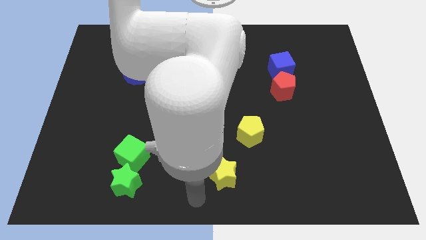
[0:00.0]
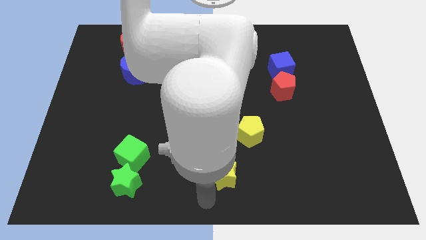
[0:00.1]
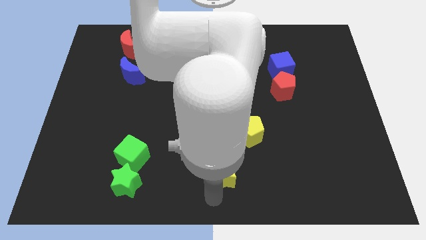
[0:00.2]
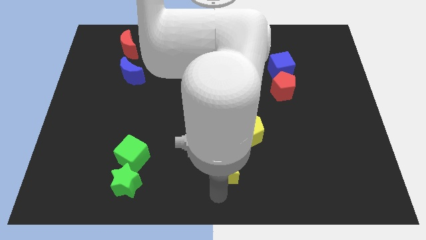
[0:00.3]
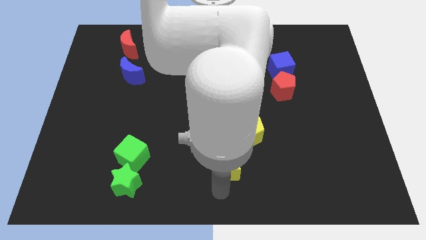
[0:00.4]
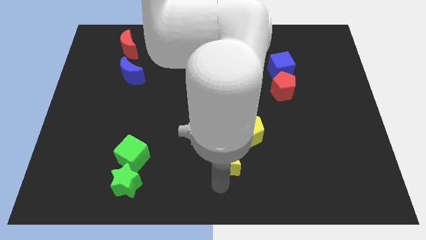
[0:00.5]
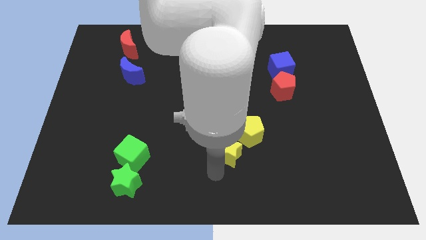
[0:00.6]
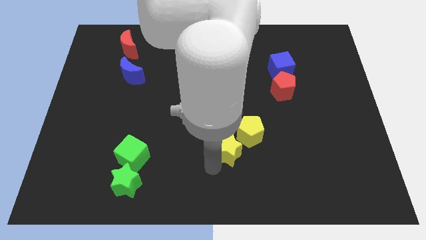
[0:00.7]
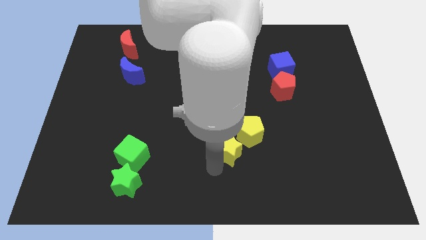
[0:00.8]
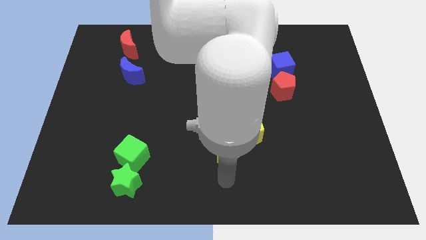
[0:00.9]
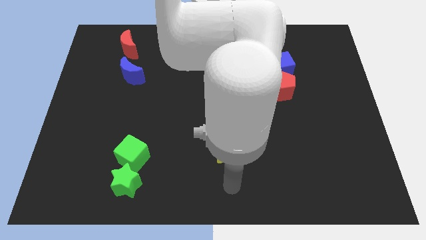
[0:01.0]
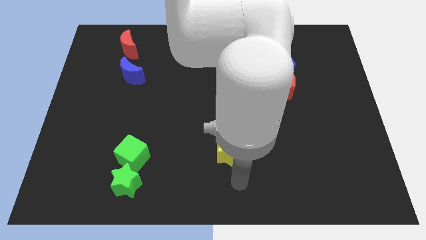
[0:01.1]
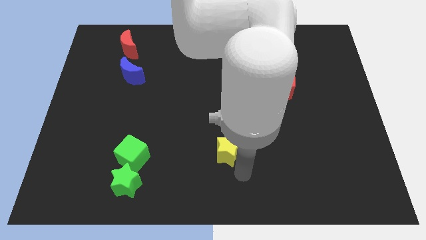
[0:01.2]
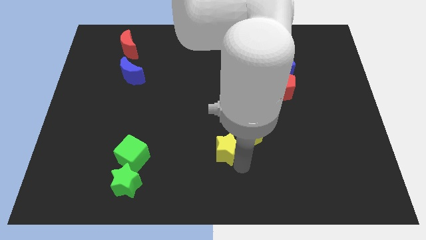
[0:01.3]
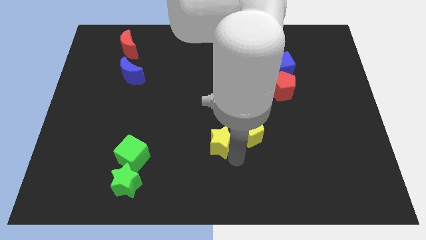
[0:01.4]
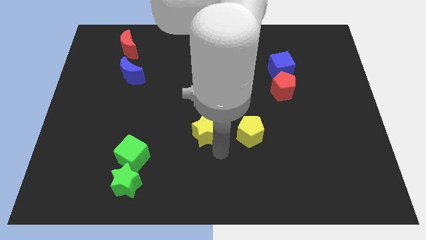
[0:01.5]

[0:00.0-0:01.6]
put the yellow star to the left side of the yellow pentagon

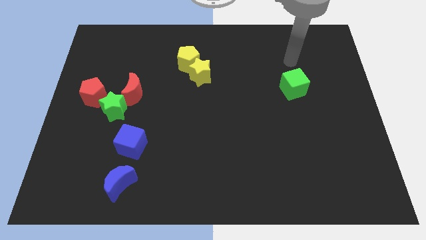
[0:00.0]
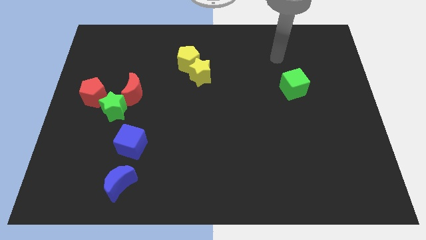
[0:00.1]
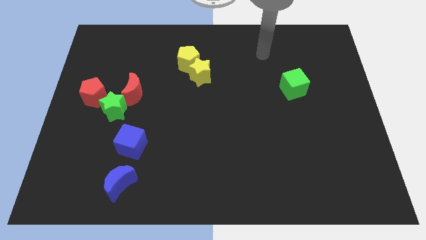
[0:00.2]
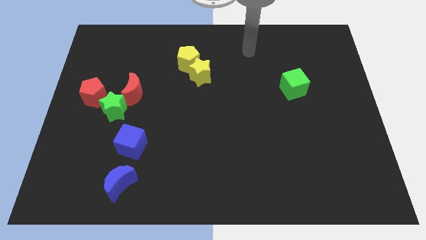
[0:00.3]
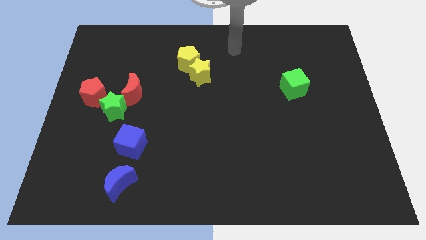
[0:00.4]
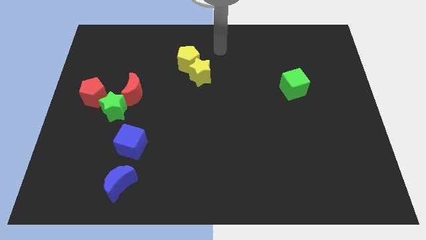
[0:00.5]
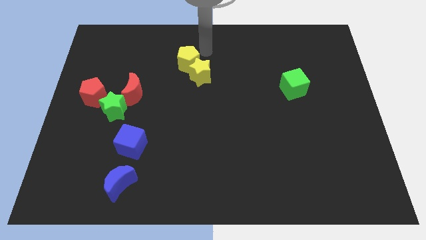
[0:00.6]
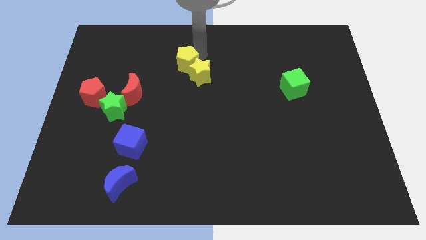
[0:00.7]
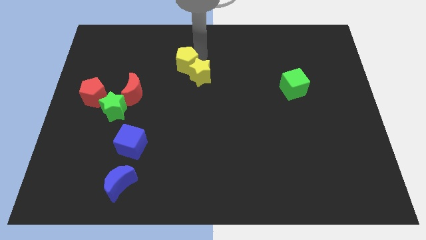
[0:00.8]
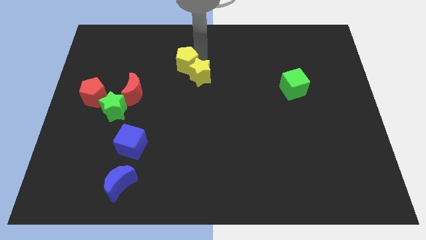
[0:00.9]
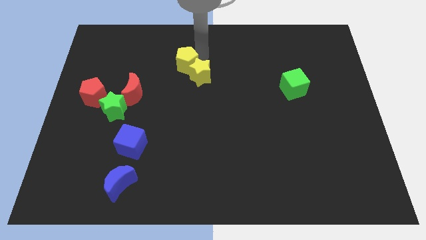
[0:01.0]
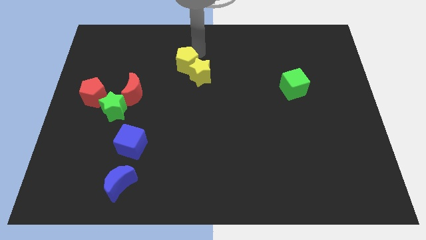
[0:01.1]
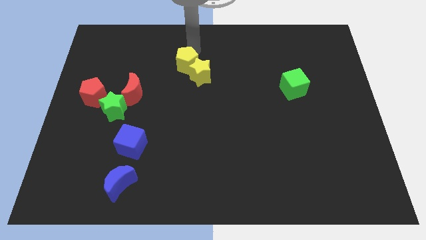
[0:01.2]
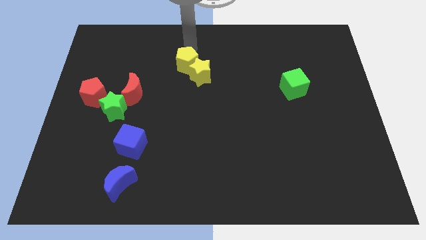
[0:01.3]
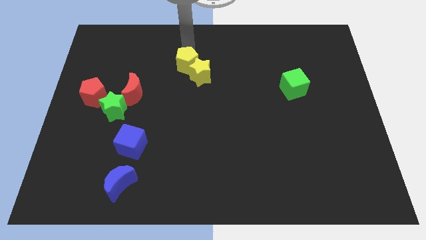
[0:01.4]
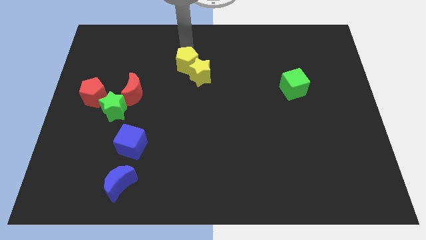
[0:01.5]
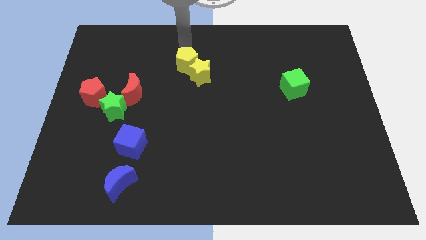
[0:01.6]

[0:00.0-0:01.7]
point the arm above the yellow pentagon

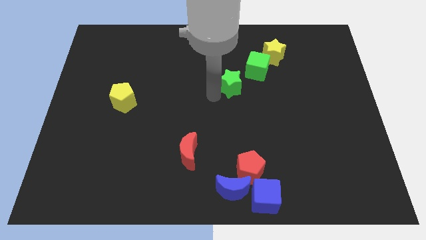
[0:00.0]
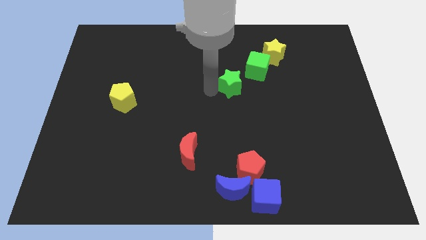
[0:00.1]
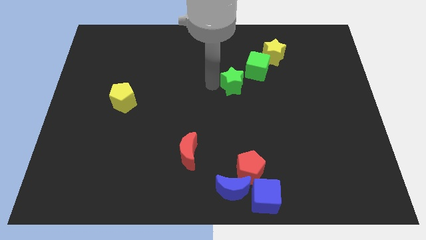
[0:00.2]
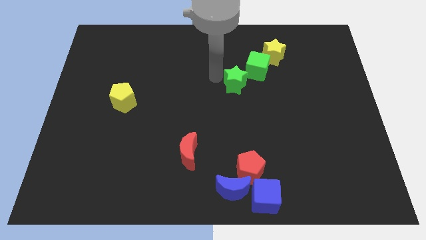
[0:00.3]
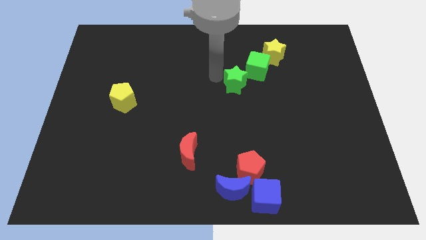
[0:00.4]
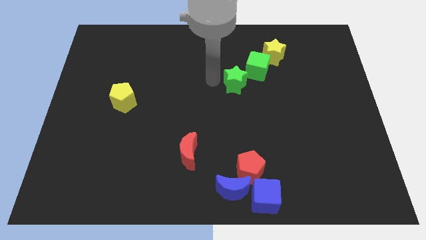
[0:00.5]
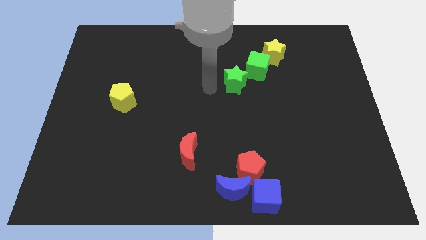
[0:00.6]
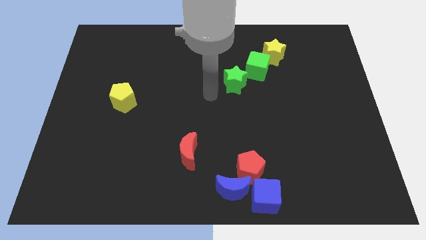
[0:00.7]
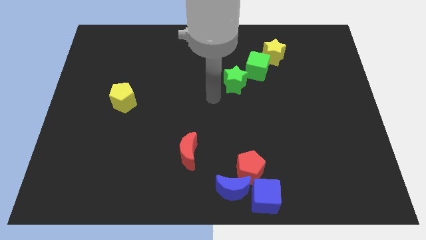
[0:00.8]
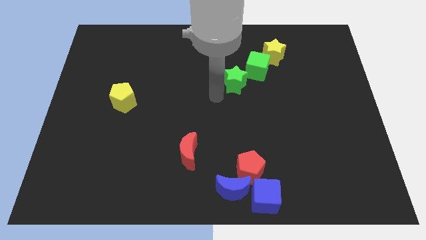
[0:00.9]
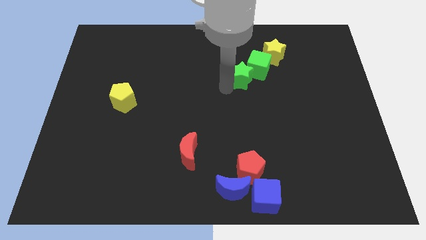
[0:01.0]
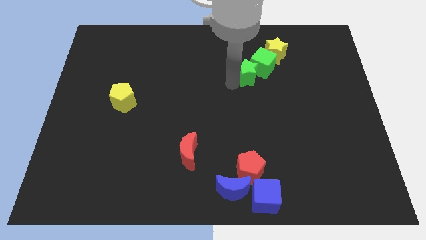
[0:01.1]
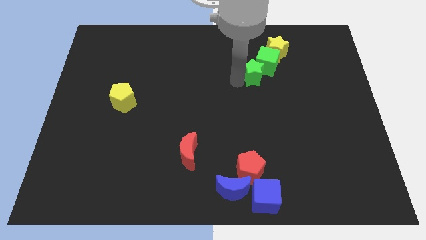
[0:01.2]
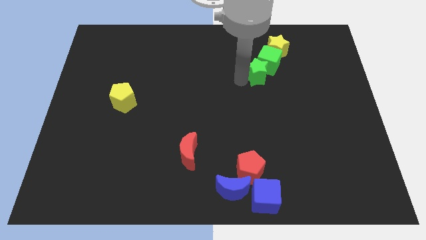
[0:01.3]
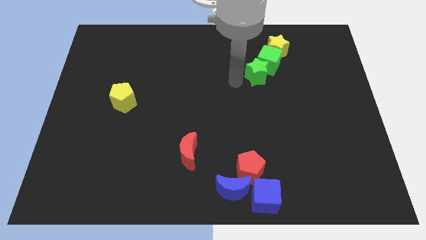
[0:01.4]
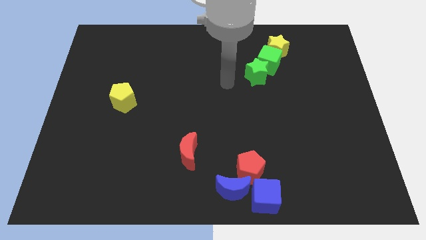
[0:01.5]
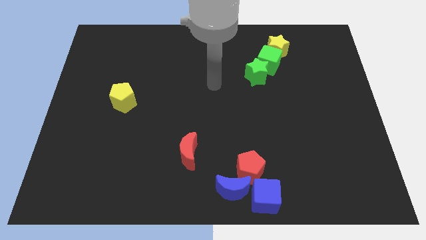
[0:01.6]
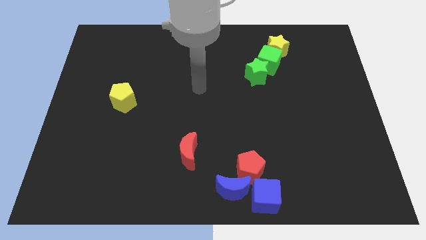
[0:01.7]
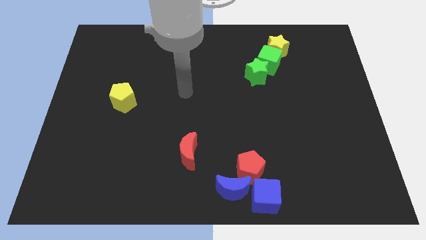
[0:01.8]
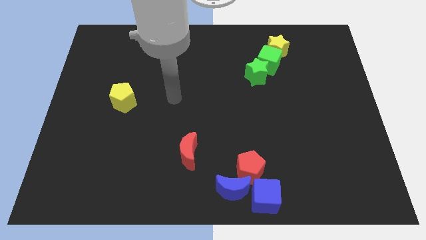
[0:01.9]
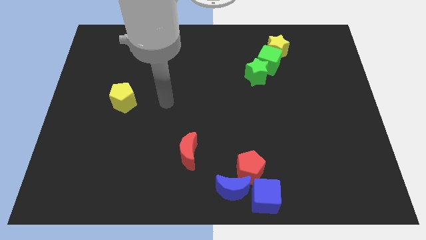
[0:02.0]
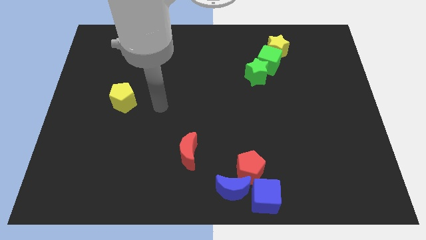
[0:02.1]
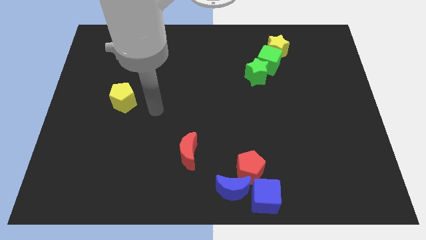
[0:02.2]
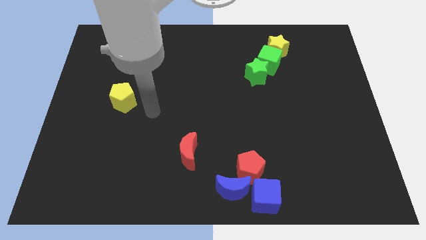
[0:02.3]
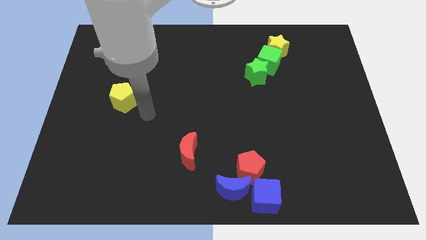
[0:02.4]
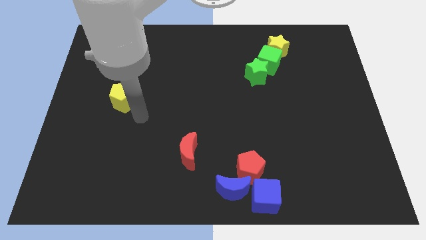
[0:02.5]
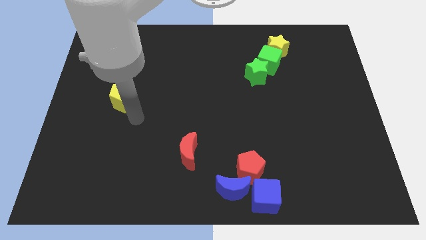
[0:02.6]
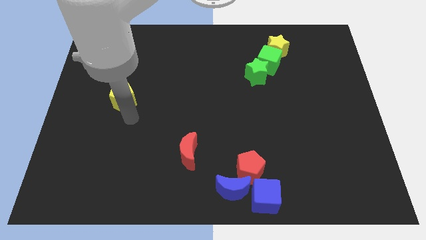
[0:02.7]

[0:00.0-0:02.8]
push the green star and green cube into the yellow star

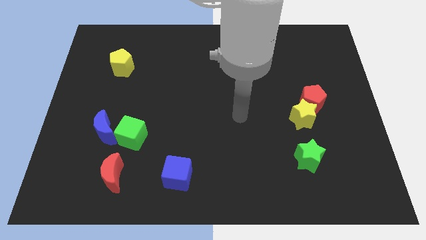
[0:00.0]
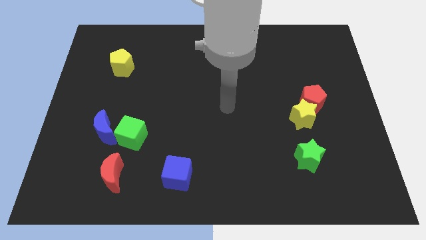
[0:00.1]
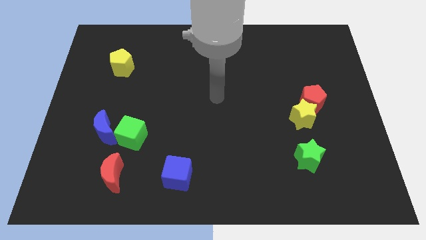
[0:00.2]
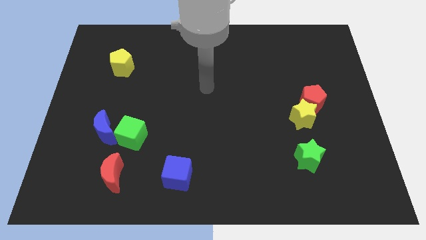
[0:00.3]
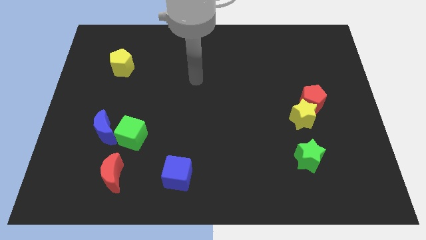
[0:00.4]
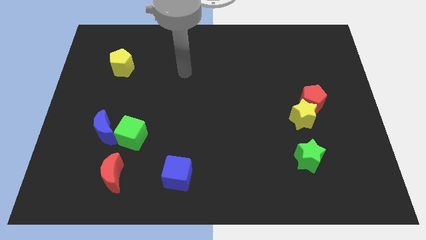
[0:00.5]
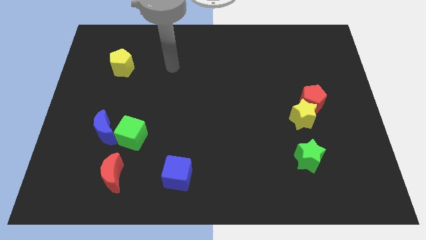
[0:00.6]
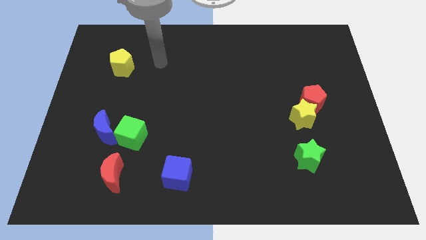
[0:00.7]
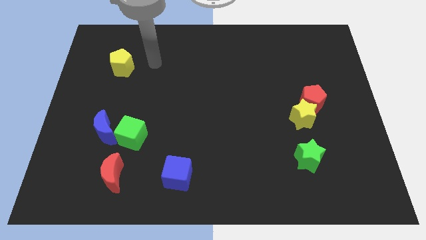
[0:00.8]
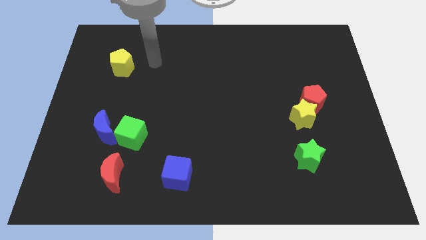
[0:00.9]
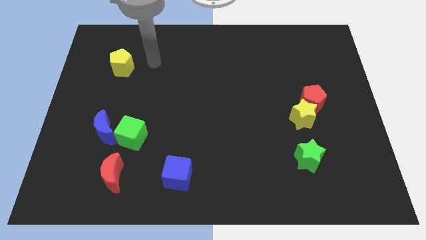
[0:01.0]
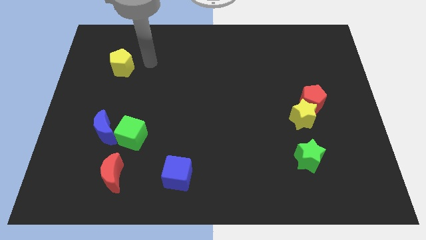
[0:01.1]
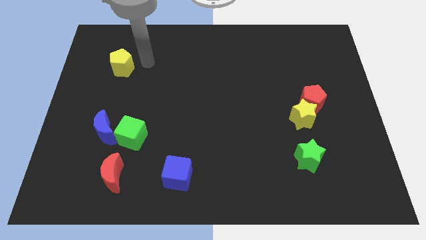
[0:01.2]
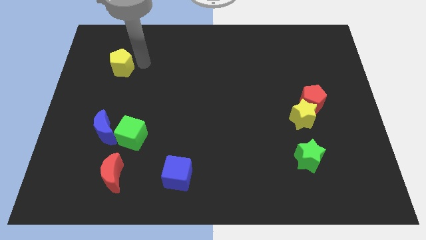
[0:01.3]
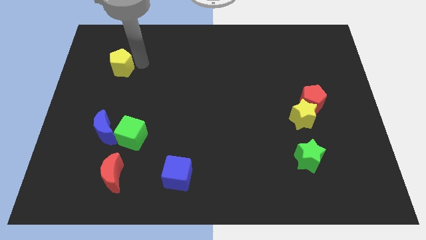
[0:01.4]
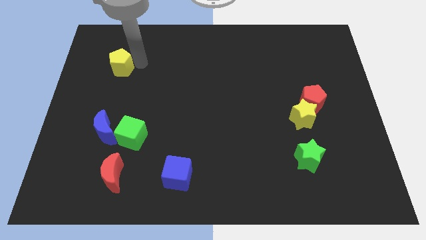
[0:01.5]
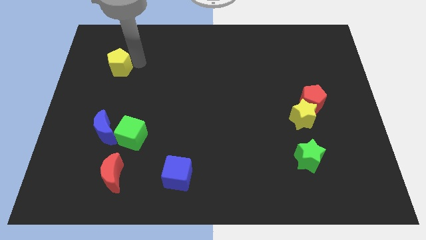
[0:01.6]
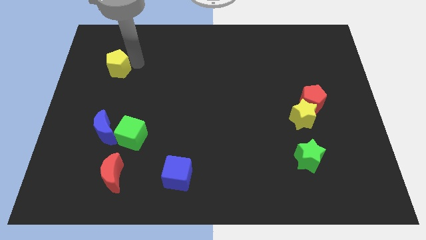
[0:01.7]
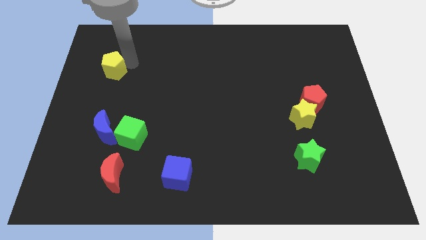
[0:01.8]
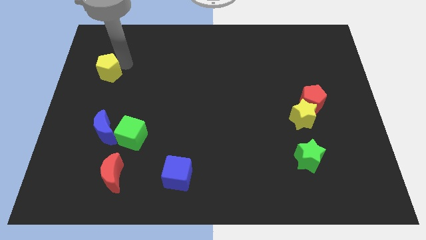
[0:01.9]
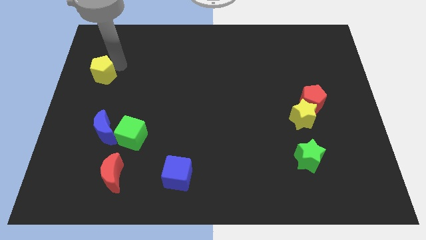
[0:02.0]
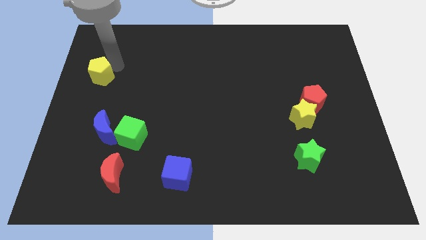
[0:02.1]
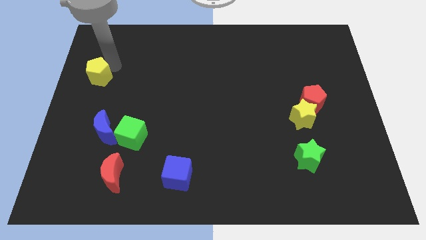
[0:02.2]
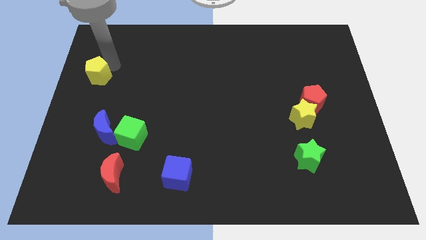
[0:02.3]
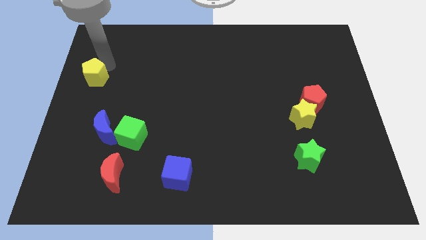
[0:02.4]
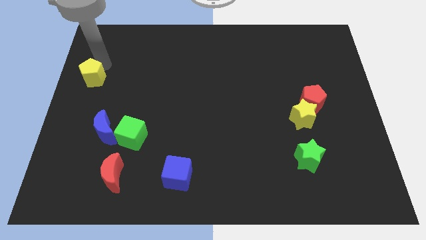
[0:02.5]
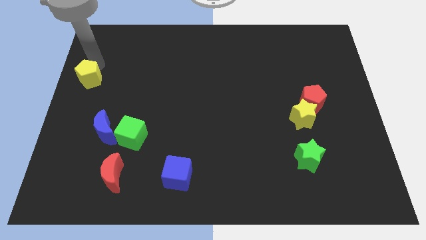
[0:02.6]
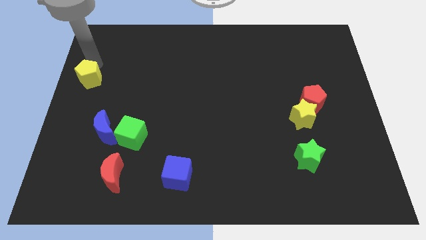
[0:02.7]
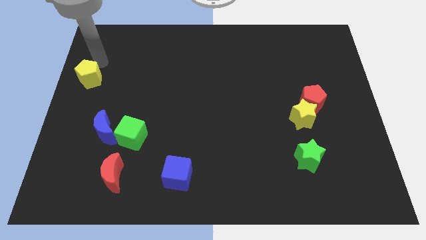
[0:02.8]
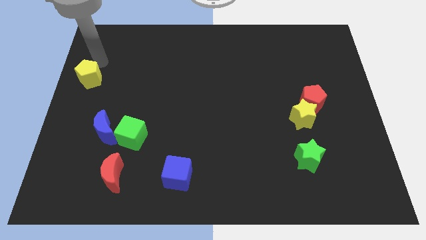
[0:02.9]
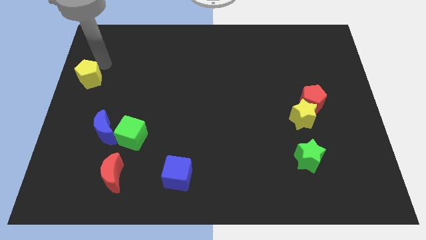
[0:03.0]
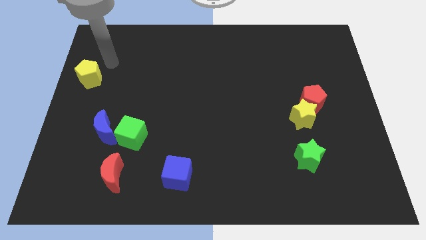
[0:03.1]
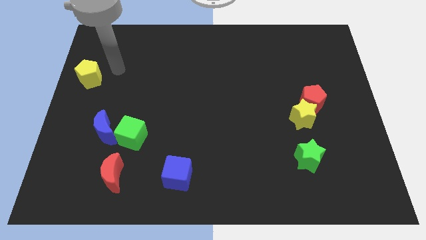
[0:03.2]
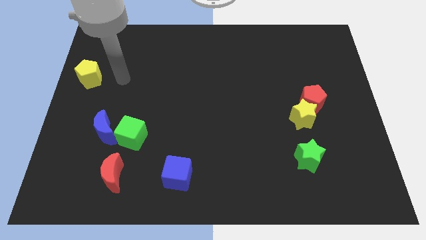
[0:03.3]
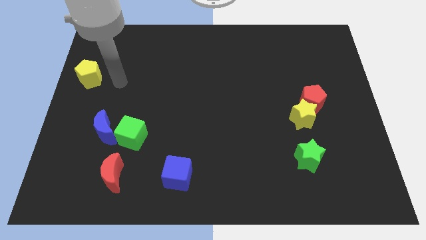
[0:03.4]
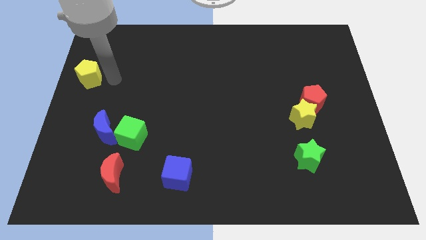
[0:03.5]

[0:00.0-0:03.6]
place the yellow pentagon above the blue moon
